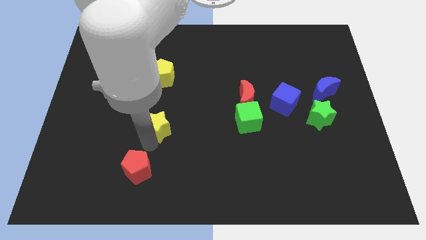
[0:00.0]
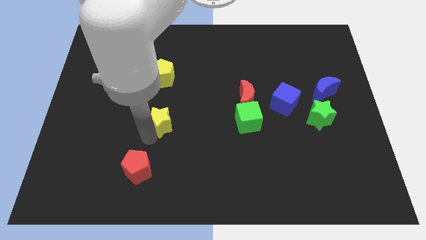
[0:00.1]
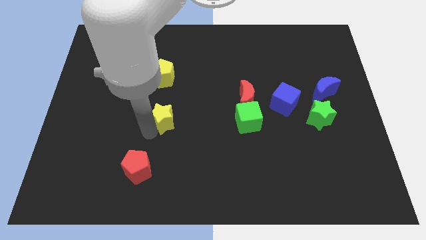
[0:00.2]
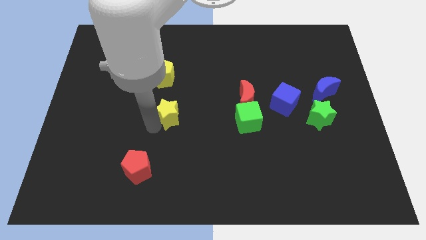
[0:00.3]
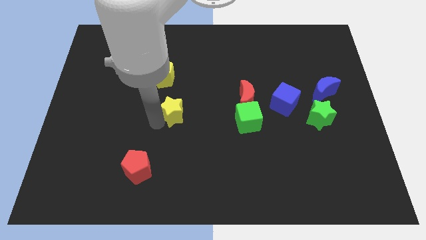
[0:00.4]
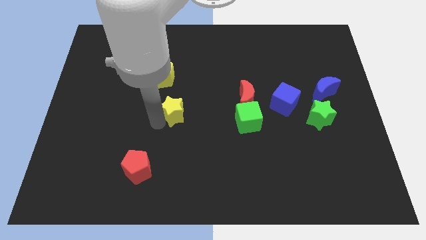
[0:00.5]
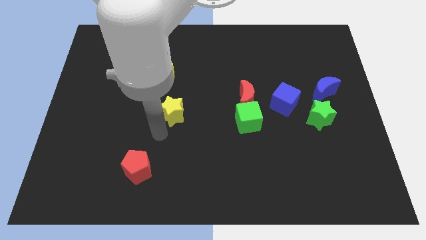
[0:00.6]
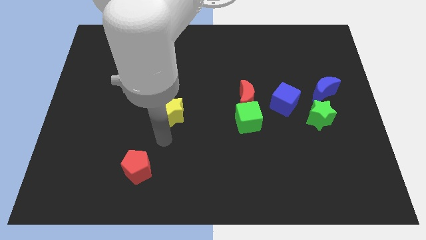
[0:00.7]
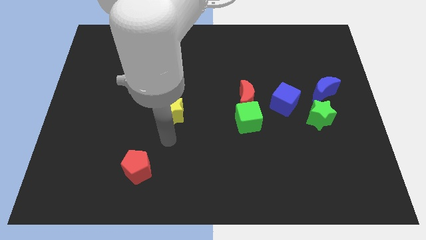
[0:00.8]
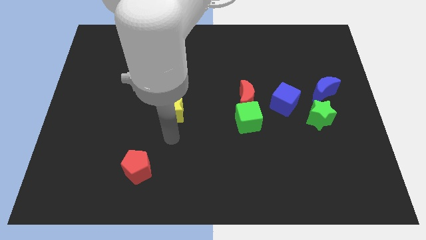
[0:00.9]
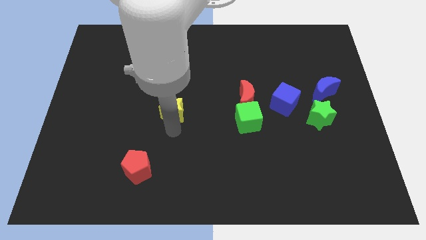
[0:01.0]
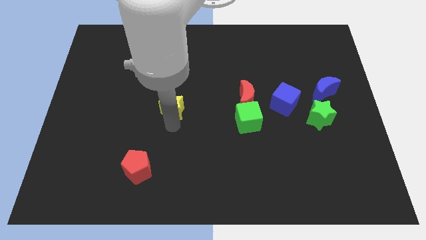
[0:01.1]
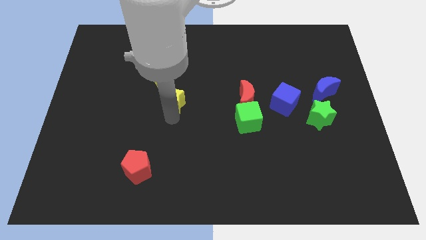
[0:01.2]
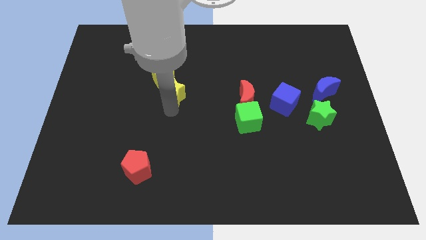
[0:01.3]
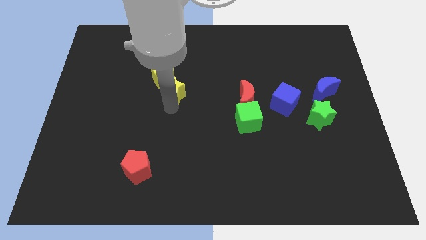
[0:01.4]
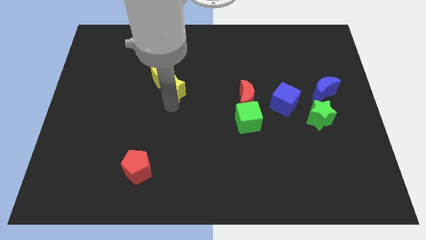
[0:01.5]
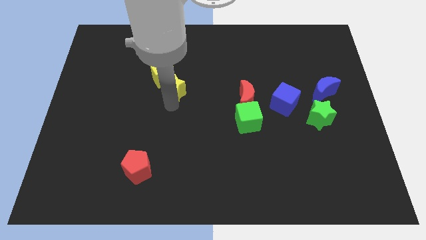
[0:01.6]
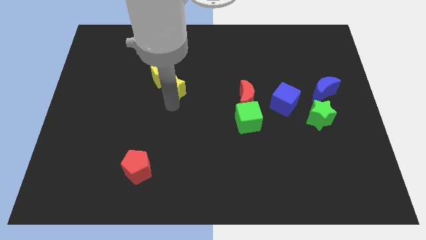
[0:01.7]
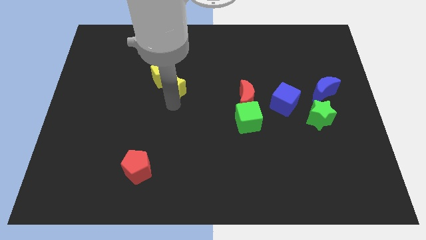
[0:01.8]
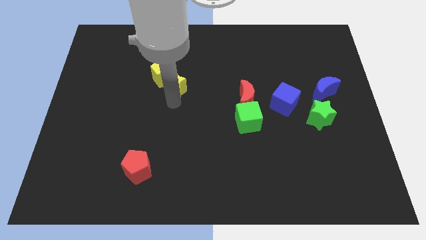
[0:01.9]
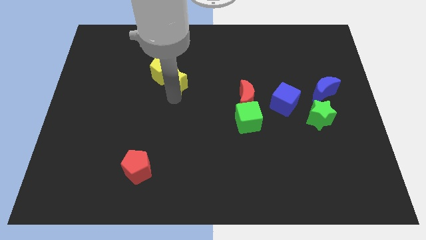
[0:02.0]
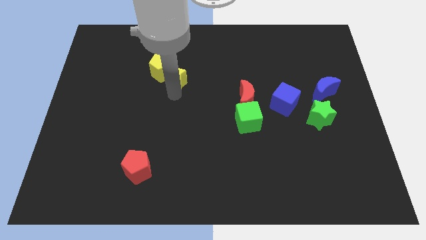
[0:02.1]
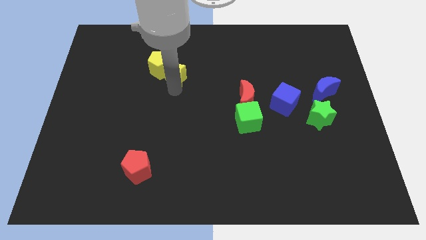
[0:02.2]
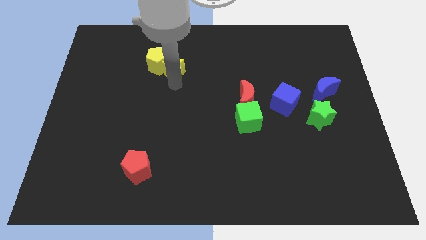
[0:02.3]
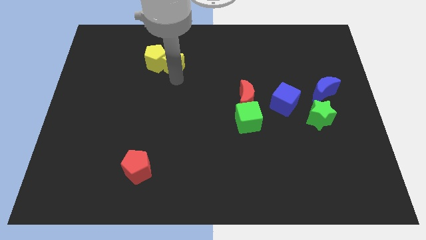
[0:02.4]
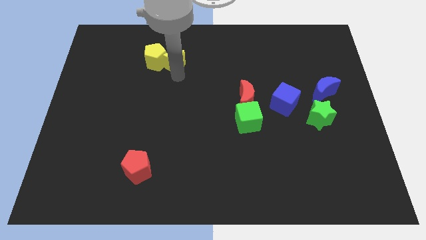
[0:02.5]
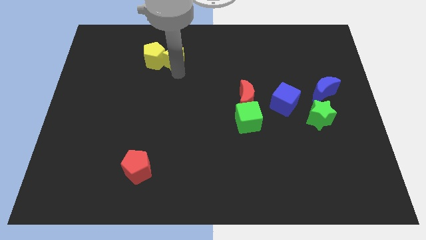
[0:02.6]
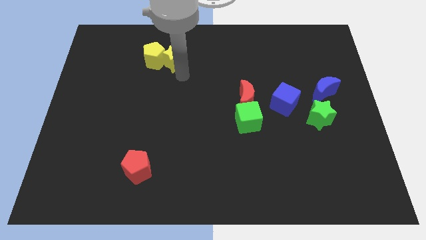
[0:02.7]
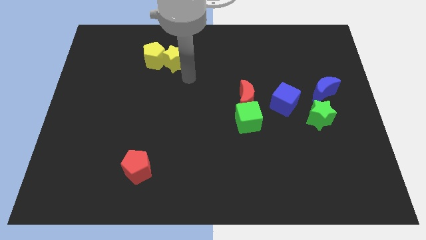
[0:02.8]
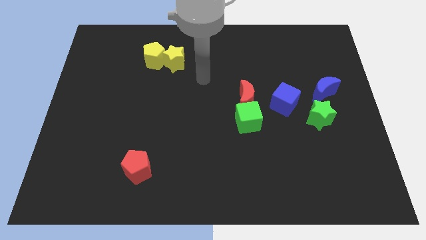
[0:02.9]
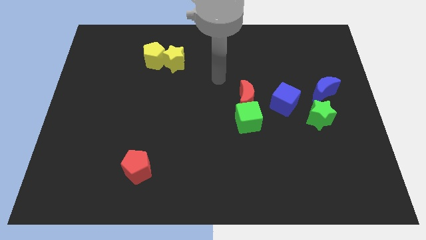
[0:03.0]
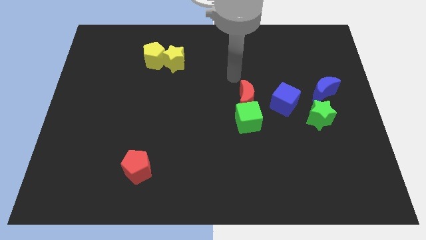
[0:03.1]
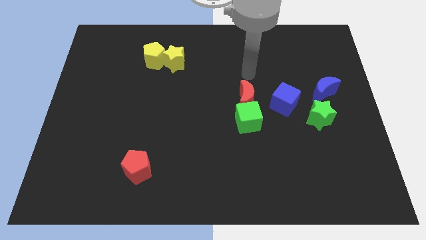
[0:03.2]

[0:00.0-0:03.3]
move the yellow star into the yellow pentagon

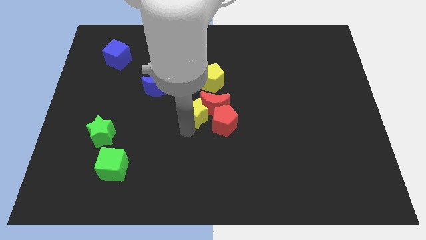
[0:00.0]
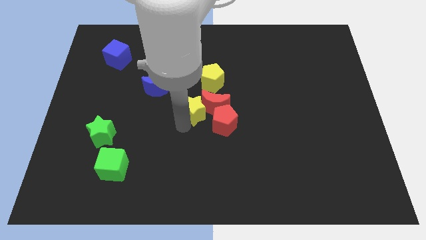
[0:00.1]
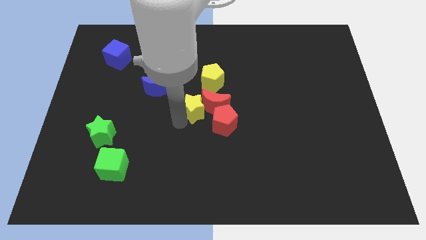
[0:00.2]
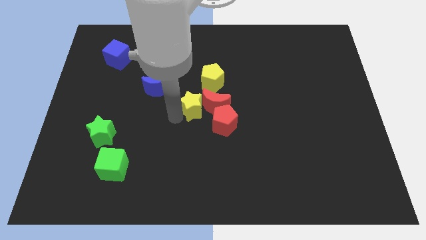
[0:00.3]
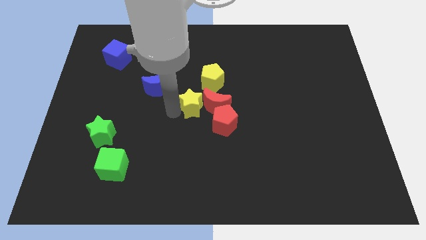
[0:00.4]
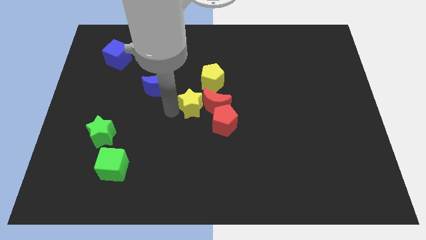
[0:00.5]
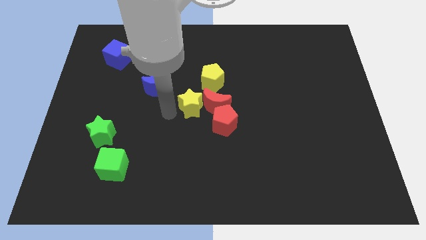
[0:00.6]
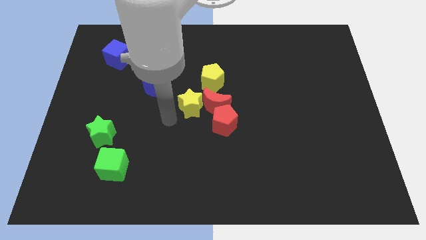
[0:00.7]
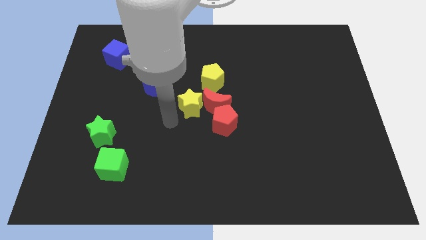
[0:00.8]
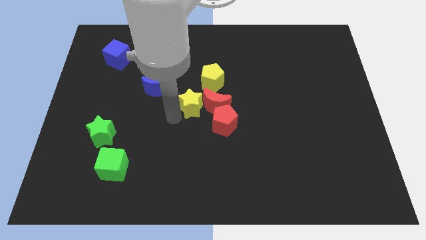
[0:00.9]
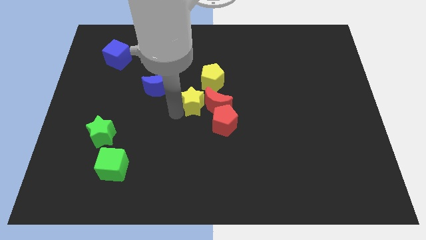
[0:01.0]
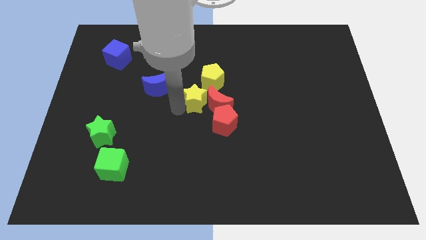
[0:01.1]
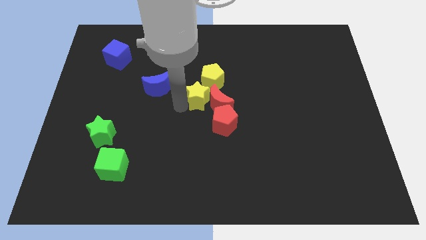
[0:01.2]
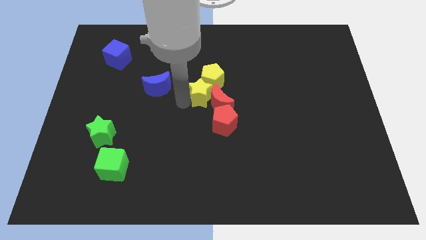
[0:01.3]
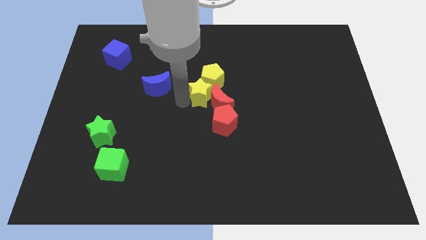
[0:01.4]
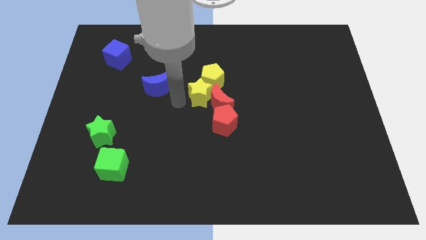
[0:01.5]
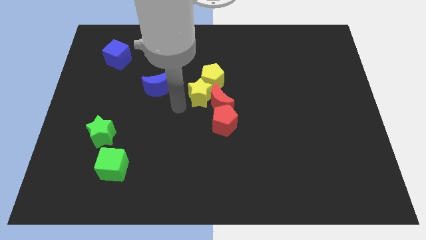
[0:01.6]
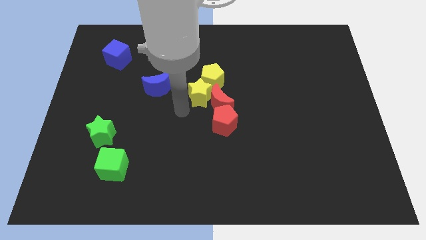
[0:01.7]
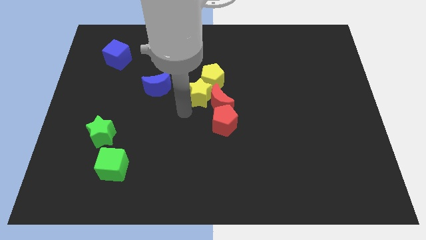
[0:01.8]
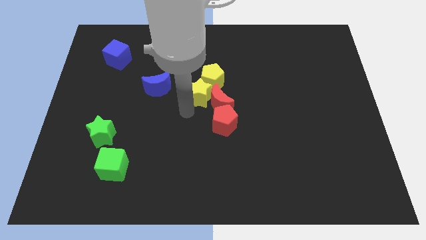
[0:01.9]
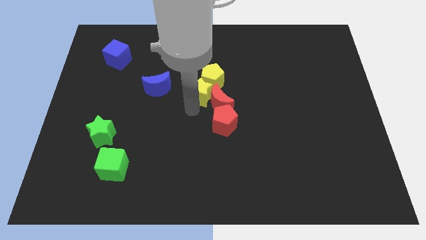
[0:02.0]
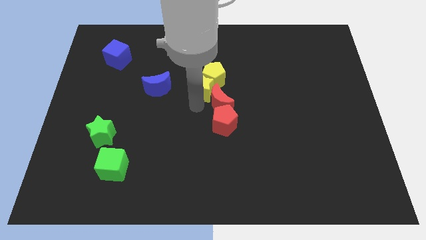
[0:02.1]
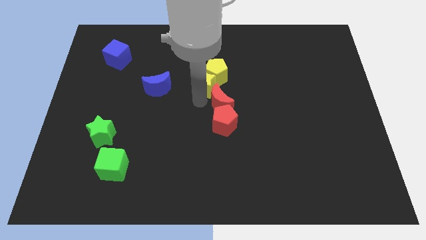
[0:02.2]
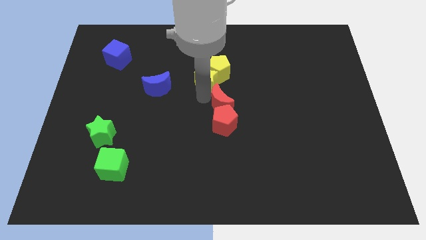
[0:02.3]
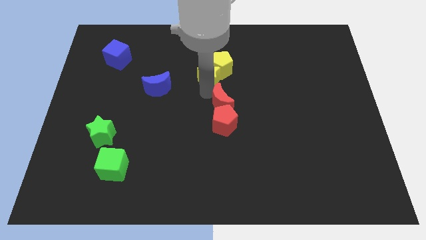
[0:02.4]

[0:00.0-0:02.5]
place the yellow star into yellow pentagon

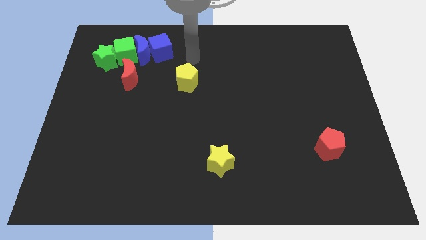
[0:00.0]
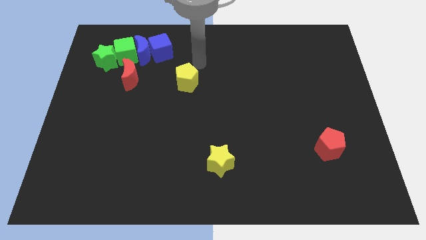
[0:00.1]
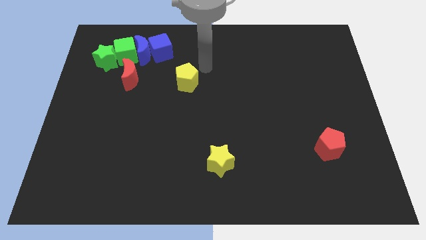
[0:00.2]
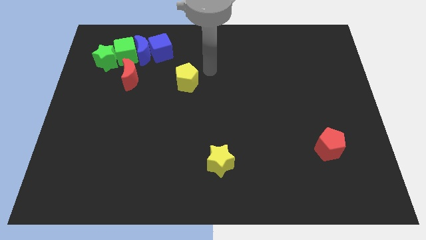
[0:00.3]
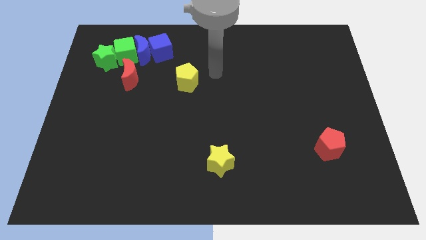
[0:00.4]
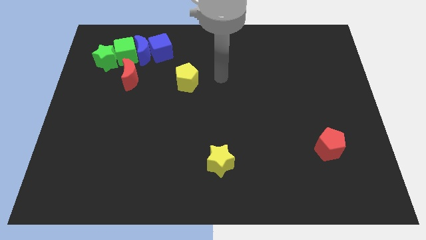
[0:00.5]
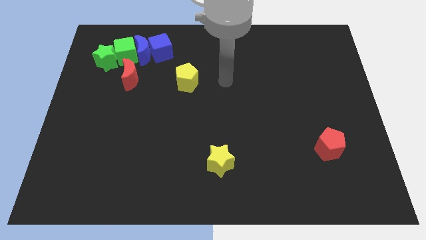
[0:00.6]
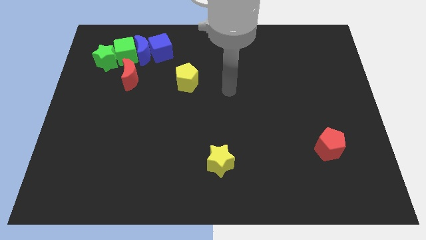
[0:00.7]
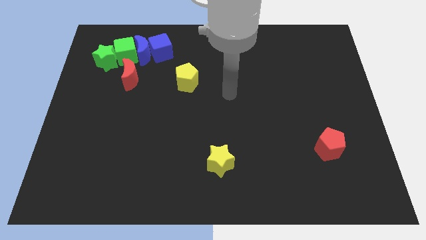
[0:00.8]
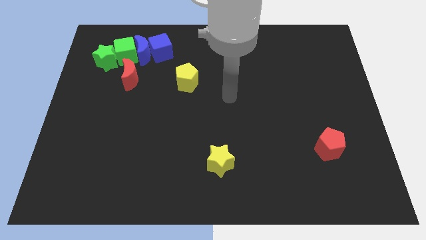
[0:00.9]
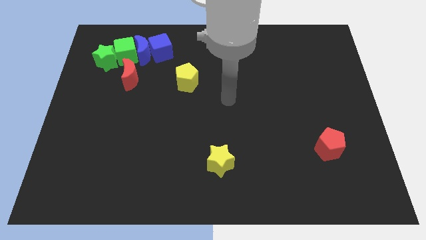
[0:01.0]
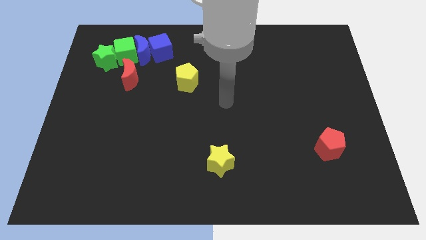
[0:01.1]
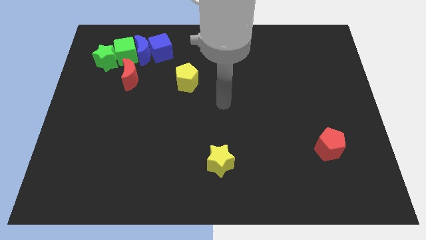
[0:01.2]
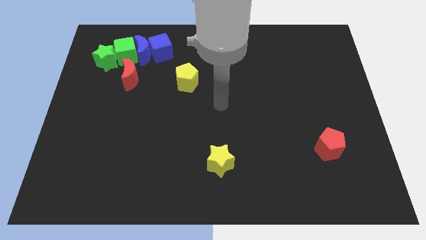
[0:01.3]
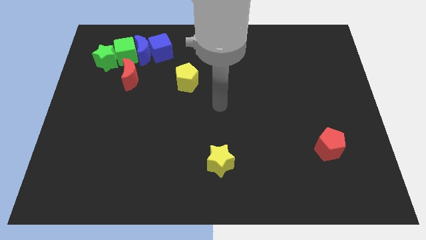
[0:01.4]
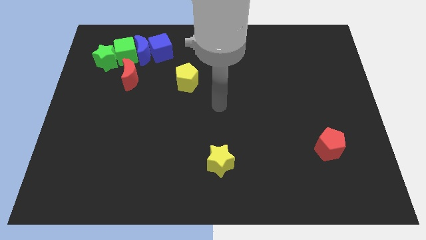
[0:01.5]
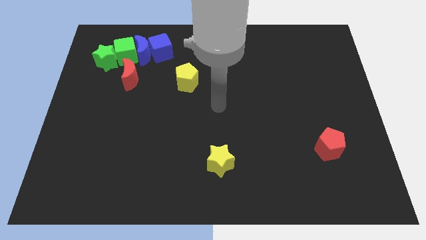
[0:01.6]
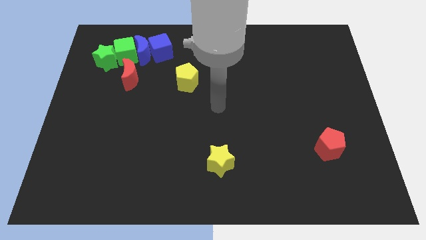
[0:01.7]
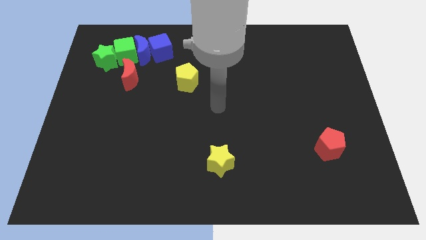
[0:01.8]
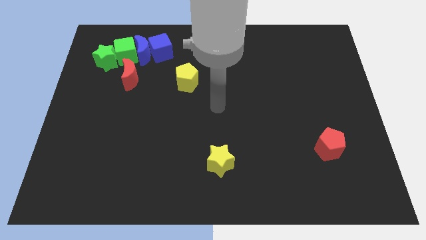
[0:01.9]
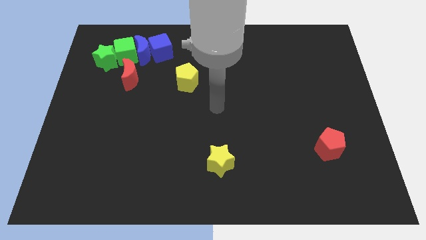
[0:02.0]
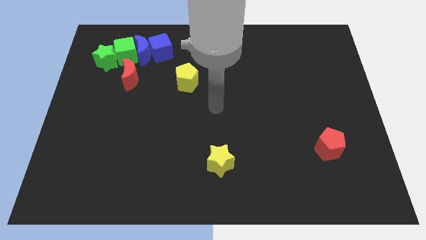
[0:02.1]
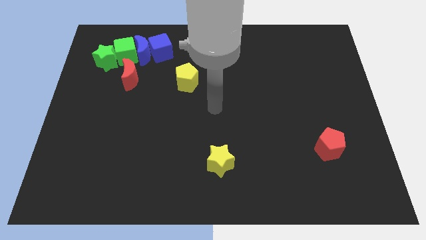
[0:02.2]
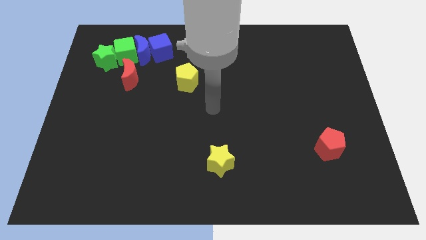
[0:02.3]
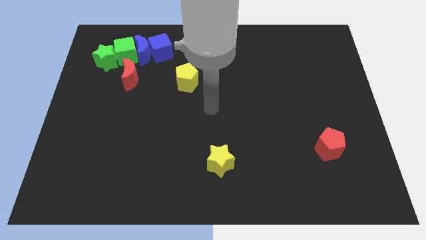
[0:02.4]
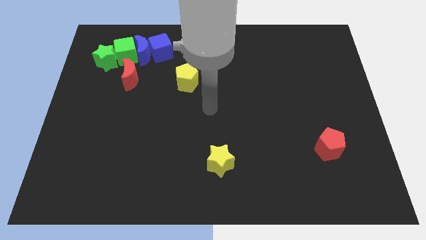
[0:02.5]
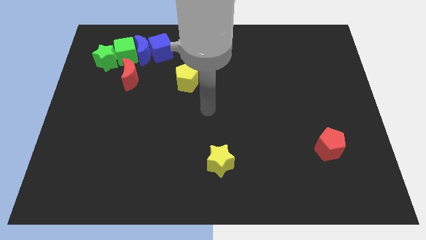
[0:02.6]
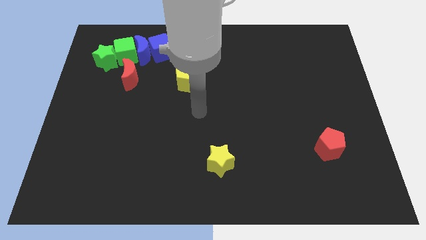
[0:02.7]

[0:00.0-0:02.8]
place your hand at center of the board

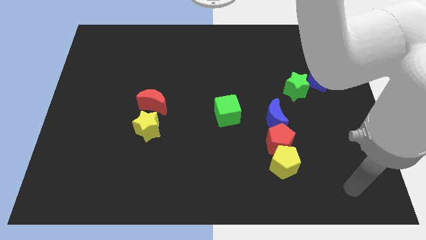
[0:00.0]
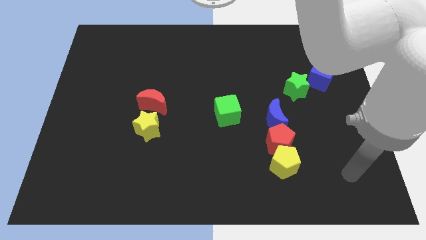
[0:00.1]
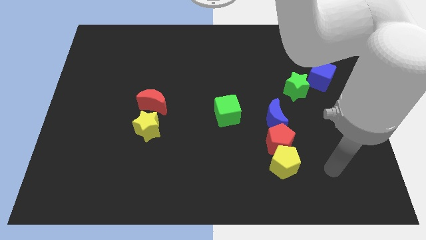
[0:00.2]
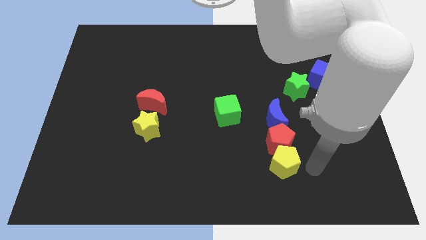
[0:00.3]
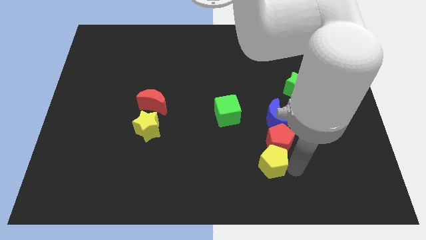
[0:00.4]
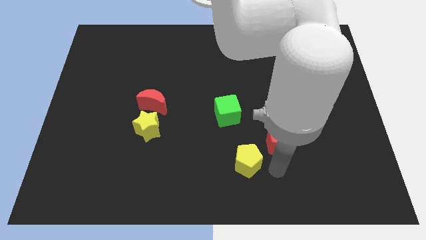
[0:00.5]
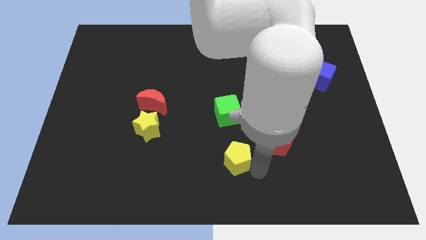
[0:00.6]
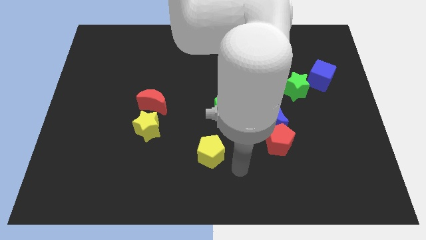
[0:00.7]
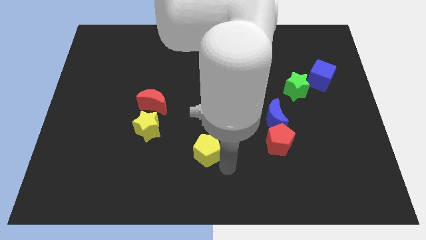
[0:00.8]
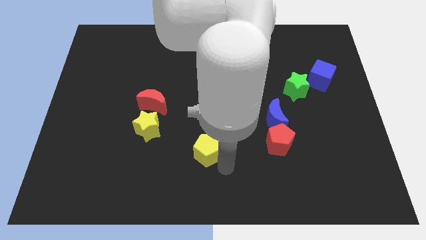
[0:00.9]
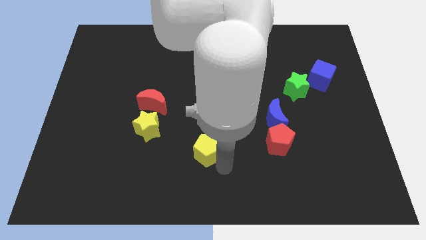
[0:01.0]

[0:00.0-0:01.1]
move the yellow pentagon diagonally to the green cube
